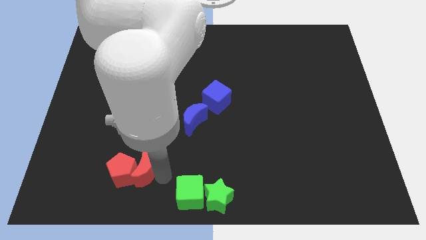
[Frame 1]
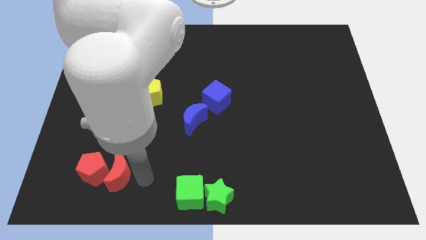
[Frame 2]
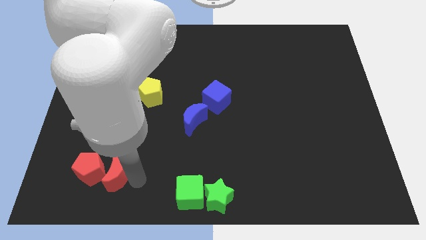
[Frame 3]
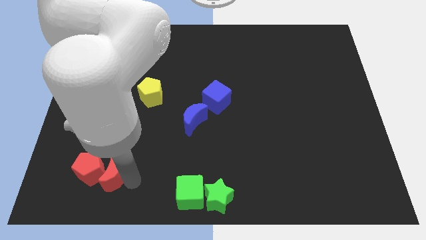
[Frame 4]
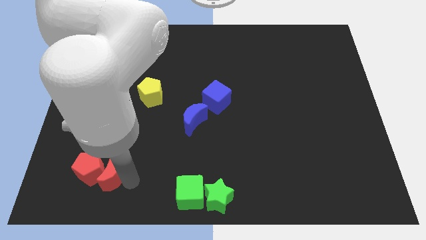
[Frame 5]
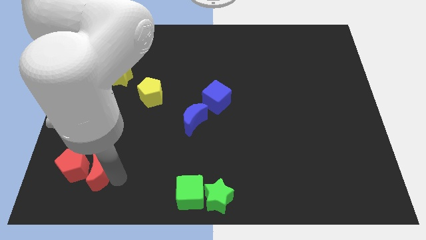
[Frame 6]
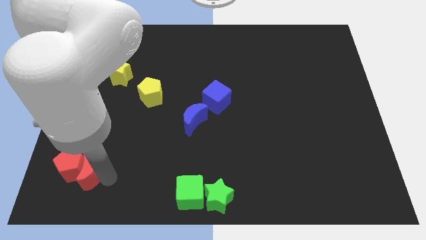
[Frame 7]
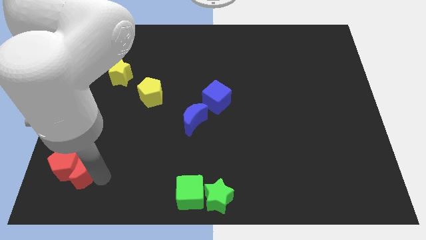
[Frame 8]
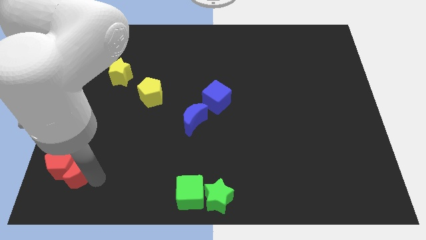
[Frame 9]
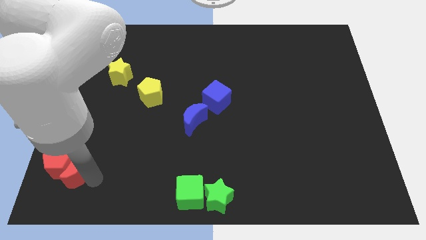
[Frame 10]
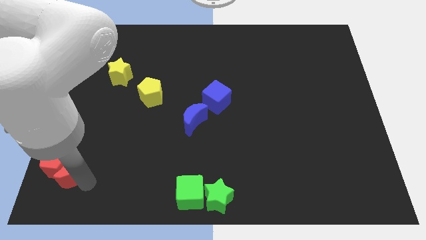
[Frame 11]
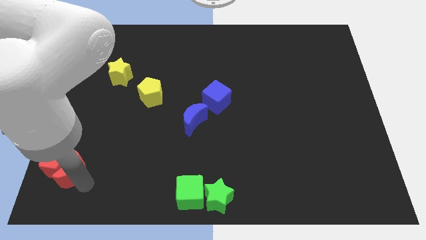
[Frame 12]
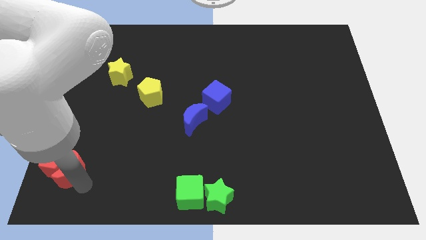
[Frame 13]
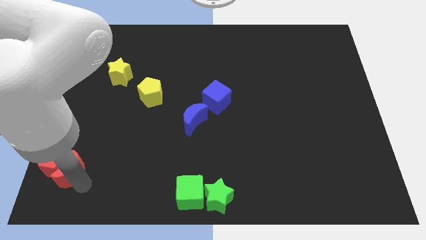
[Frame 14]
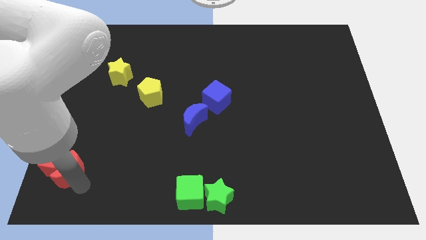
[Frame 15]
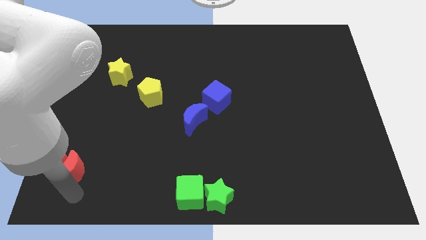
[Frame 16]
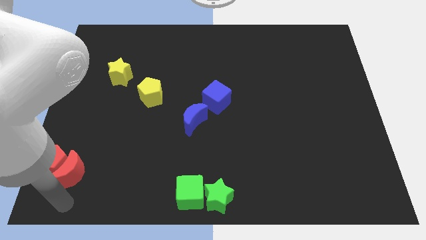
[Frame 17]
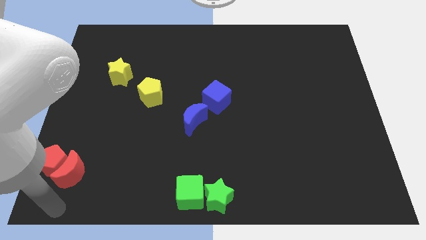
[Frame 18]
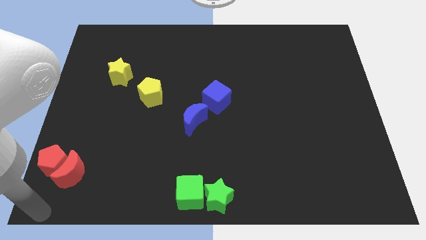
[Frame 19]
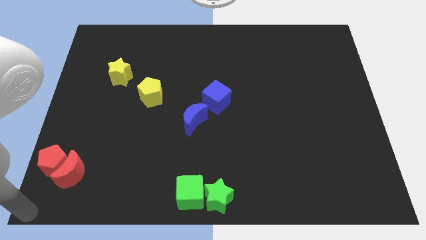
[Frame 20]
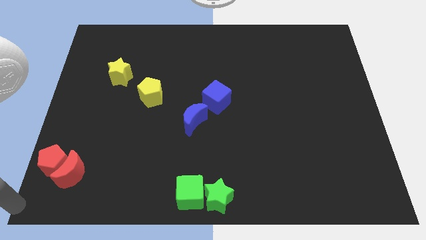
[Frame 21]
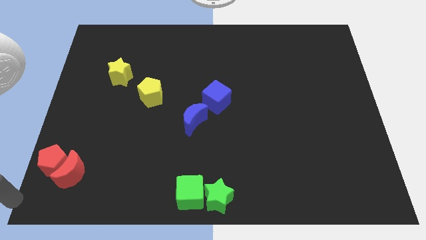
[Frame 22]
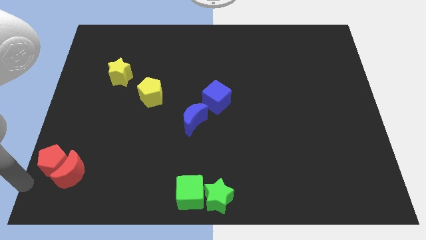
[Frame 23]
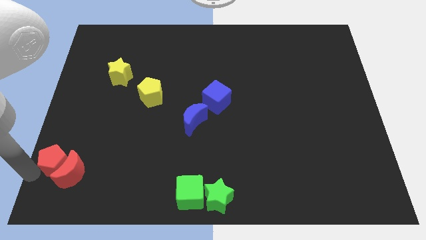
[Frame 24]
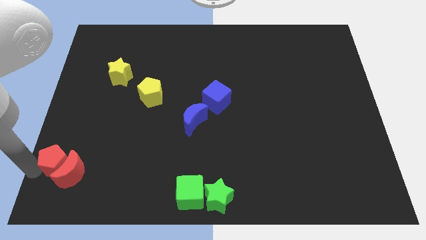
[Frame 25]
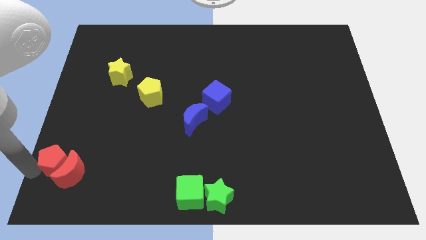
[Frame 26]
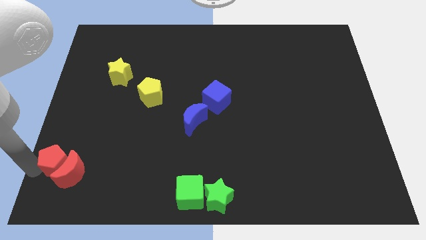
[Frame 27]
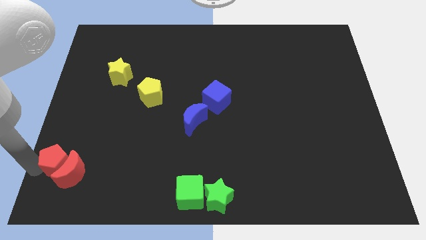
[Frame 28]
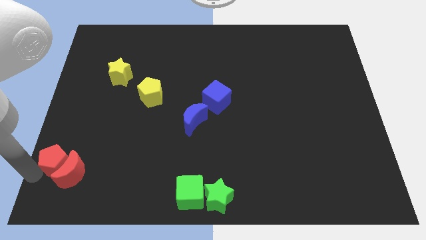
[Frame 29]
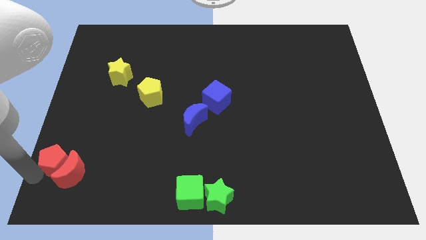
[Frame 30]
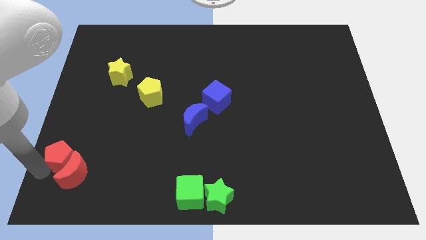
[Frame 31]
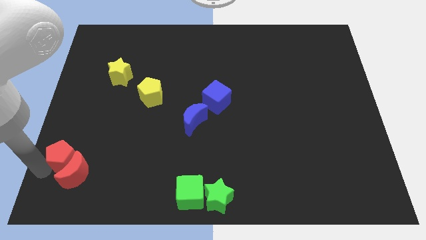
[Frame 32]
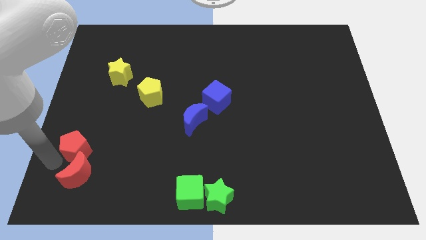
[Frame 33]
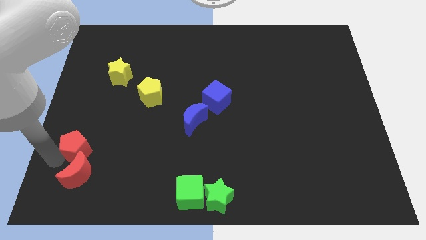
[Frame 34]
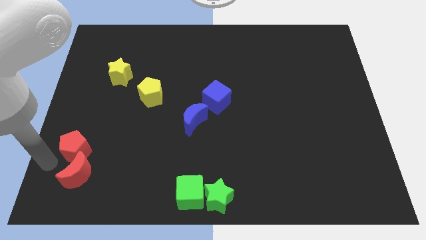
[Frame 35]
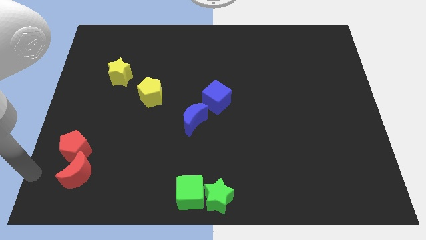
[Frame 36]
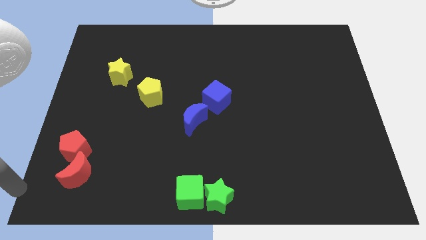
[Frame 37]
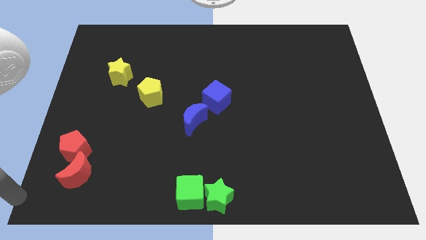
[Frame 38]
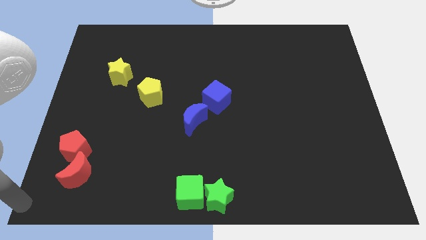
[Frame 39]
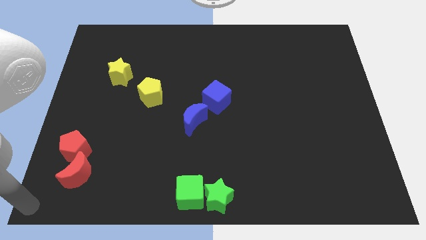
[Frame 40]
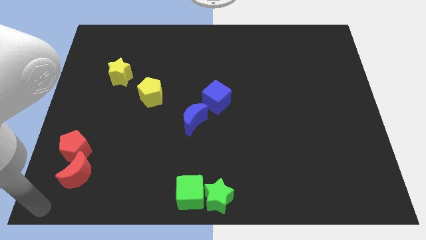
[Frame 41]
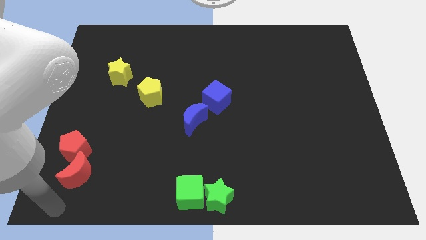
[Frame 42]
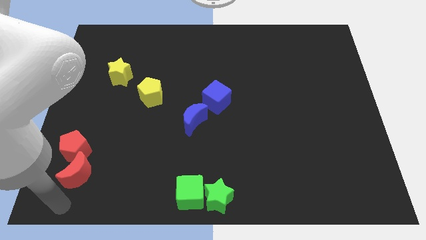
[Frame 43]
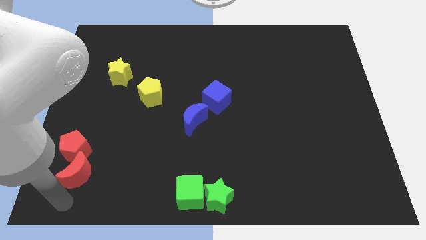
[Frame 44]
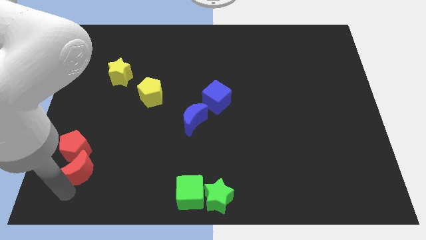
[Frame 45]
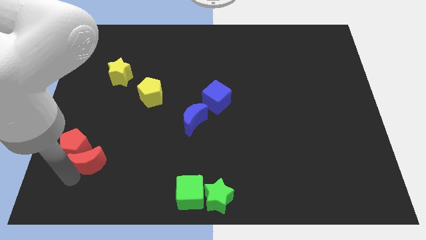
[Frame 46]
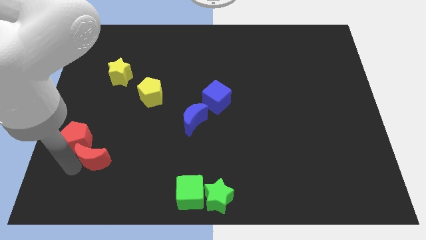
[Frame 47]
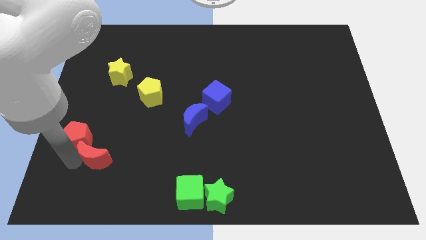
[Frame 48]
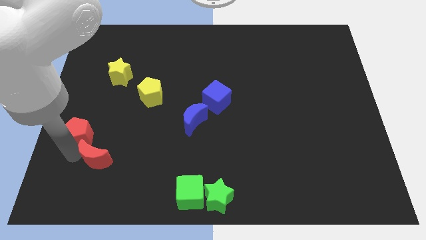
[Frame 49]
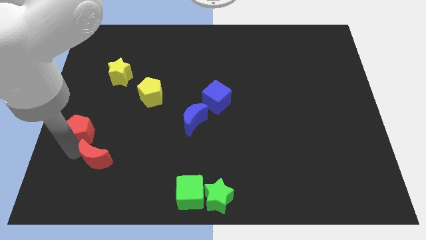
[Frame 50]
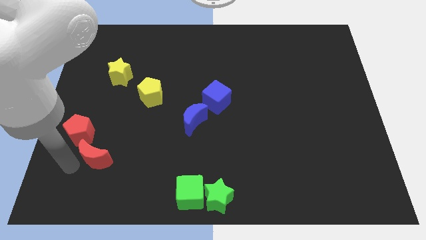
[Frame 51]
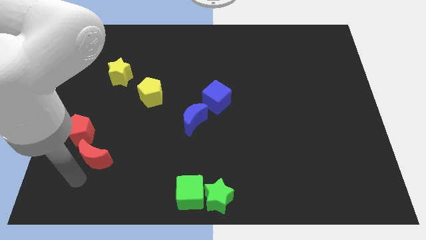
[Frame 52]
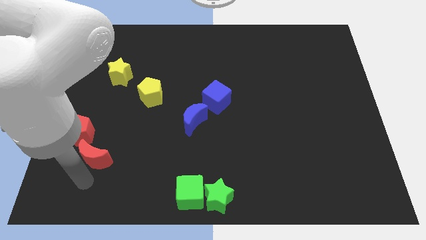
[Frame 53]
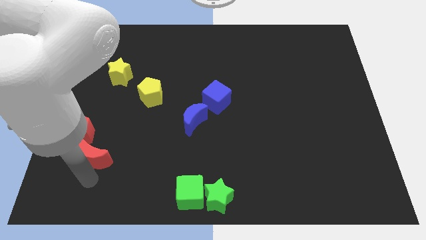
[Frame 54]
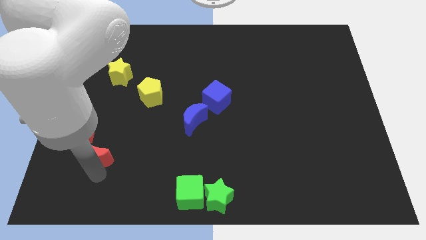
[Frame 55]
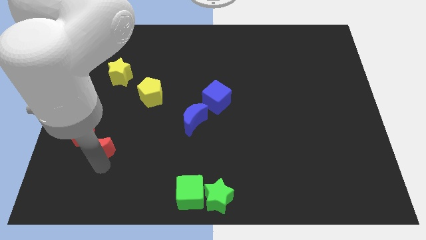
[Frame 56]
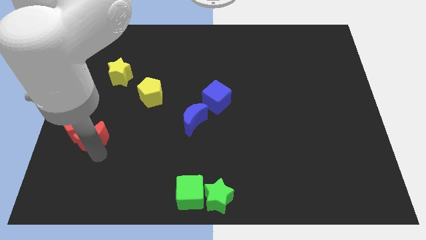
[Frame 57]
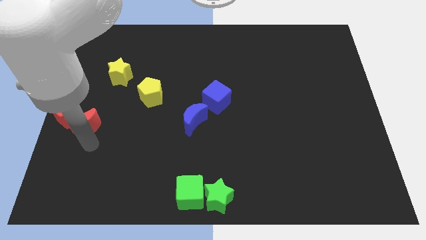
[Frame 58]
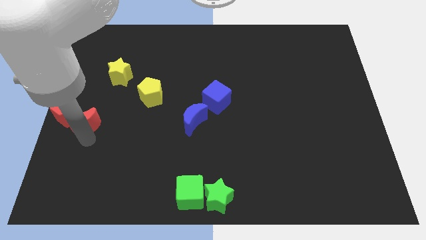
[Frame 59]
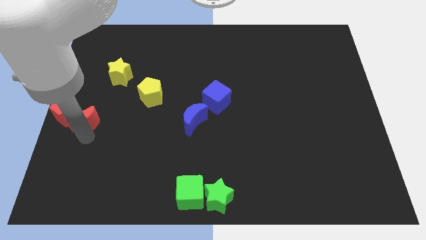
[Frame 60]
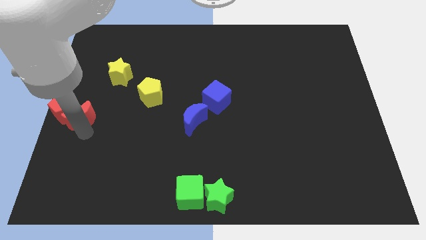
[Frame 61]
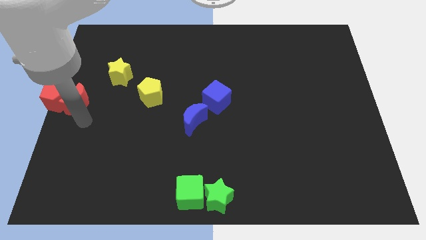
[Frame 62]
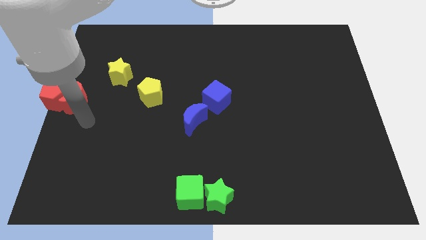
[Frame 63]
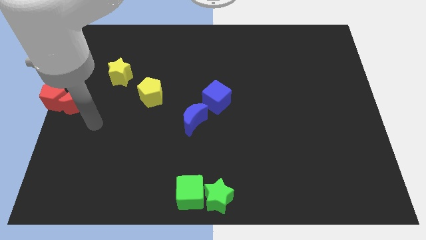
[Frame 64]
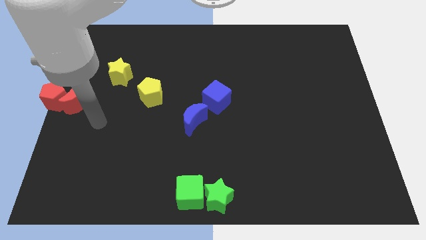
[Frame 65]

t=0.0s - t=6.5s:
place the red crescent and red pentagon at center left

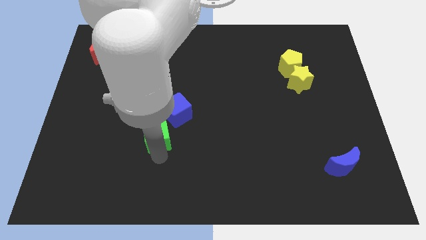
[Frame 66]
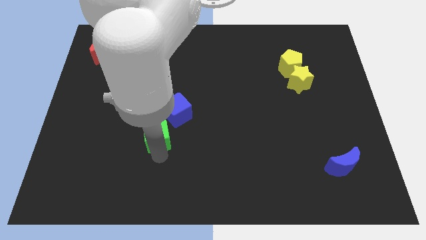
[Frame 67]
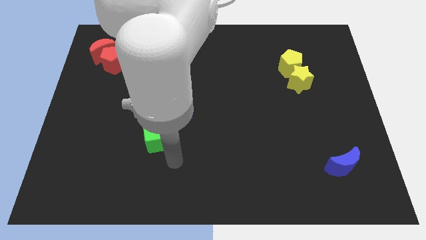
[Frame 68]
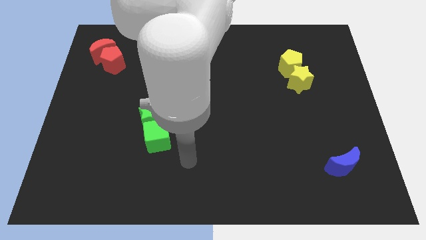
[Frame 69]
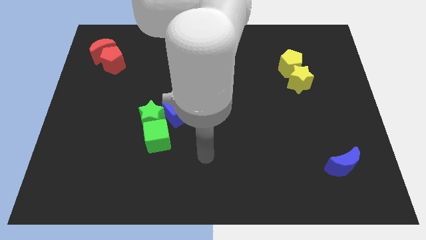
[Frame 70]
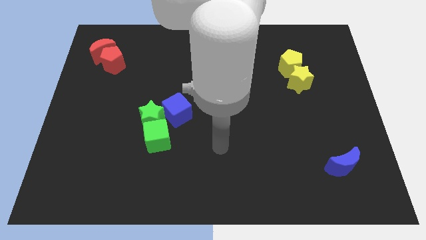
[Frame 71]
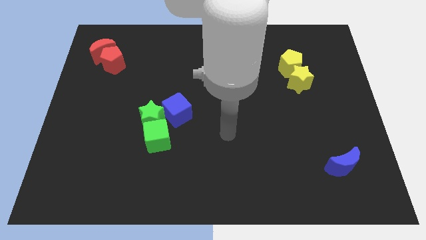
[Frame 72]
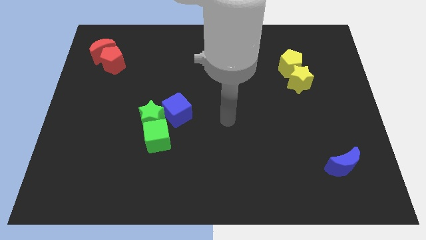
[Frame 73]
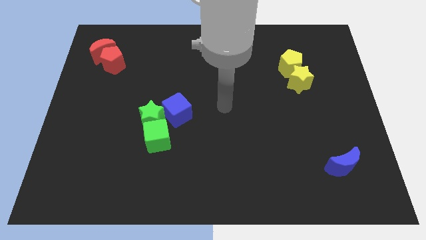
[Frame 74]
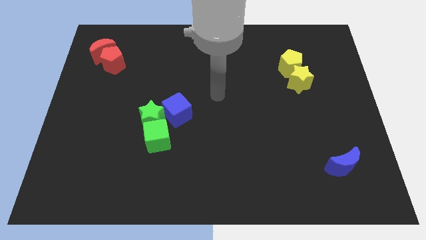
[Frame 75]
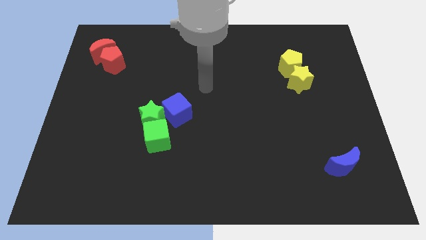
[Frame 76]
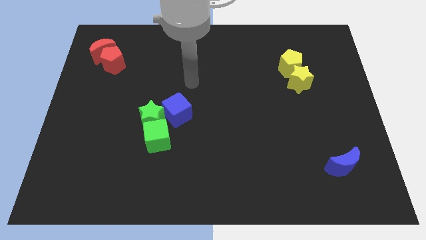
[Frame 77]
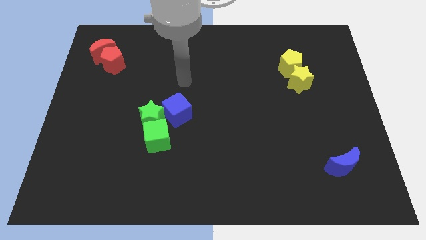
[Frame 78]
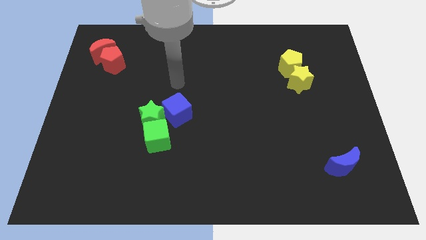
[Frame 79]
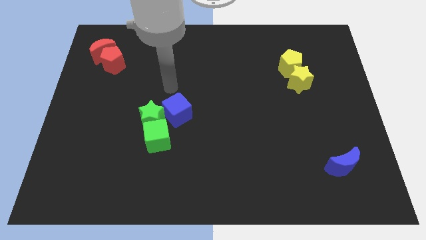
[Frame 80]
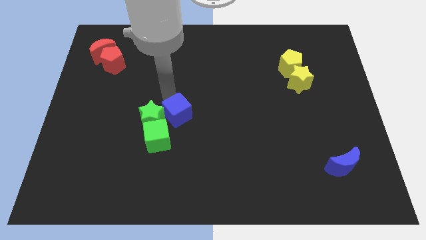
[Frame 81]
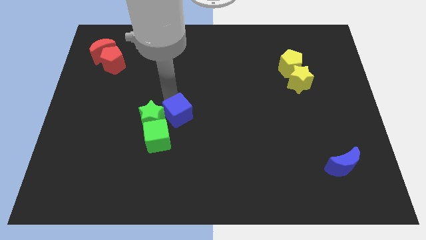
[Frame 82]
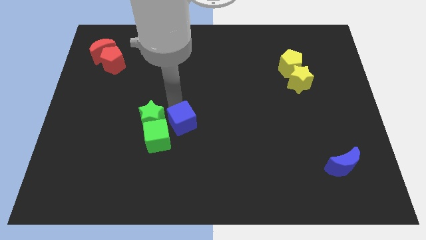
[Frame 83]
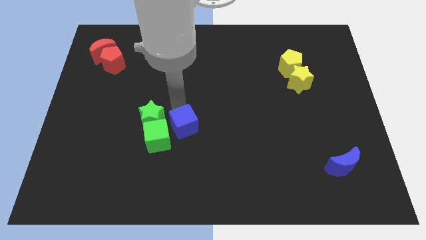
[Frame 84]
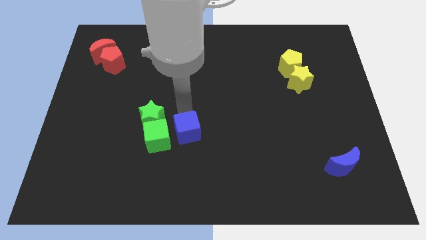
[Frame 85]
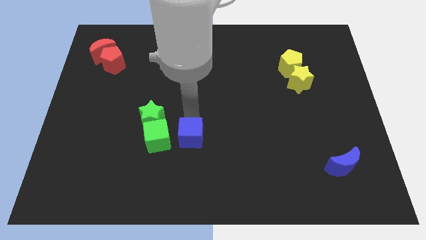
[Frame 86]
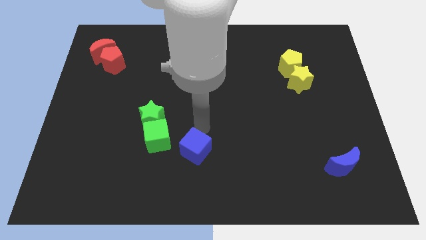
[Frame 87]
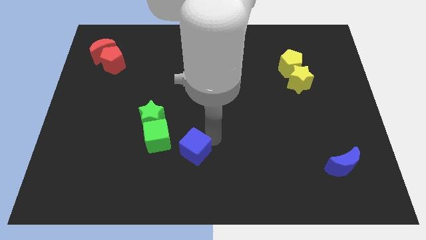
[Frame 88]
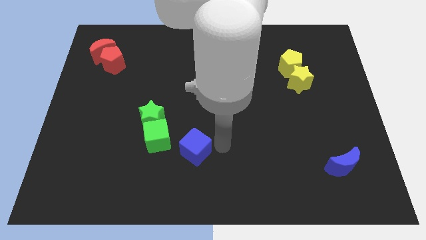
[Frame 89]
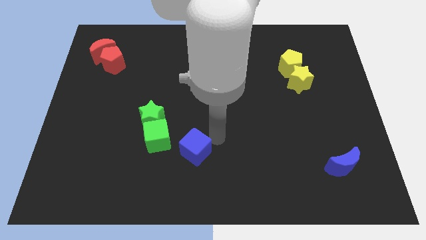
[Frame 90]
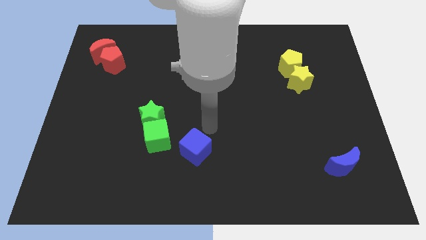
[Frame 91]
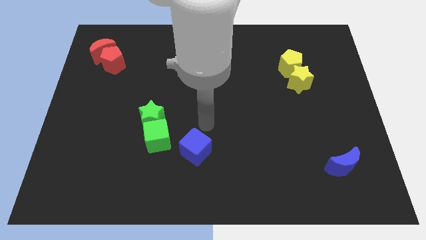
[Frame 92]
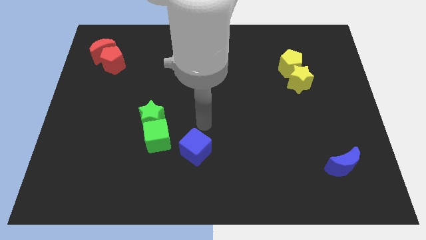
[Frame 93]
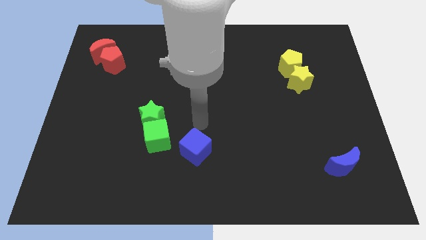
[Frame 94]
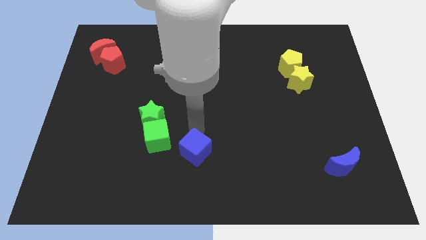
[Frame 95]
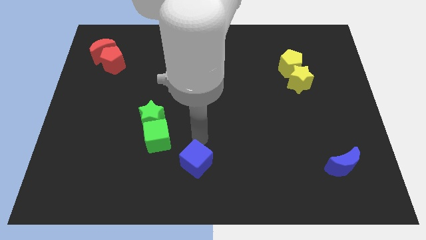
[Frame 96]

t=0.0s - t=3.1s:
move blue cube to the bottom right of the green cube
